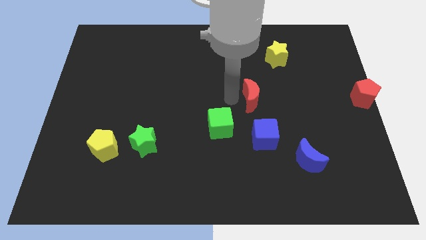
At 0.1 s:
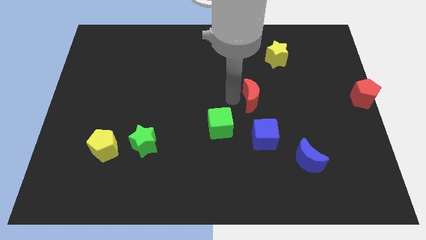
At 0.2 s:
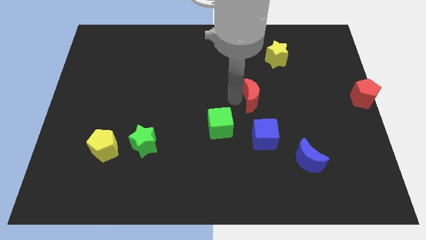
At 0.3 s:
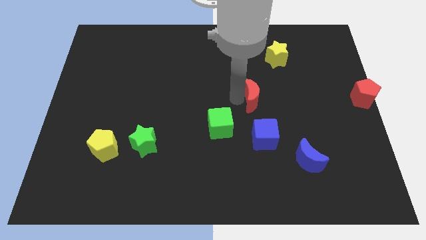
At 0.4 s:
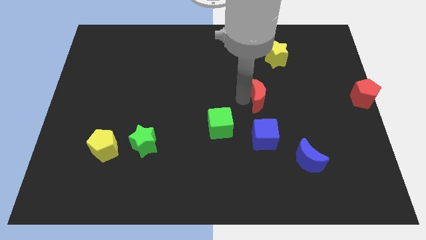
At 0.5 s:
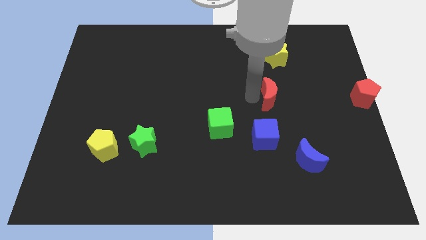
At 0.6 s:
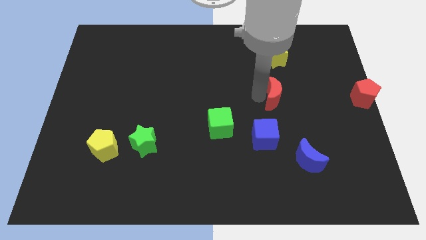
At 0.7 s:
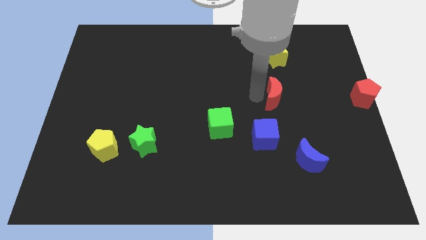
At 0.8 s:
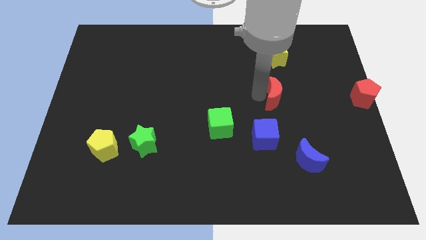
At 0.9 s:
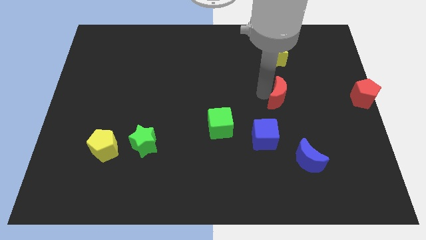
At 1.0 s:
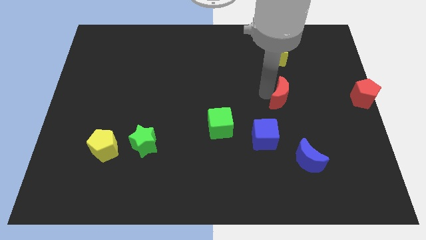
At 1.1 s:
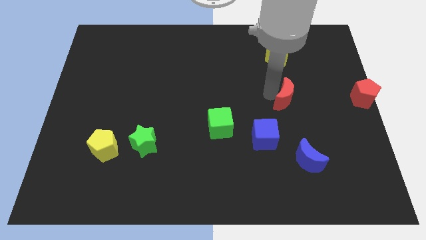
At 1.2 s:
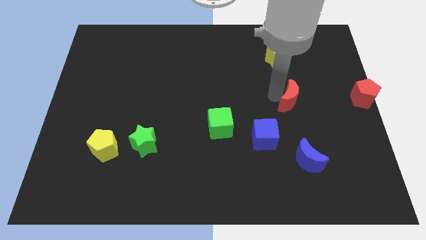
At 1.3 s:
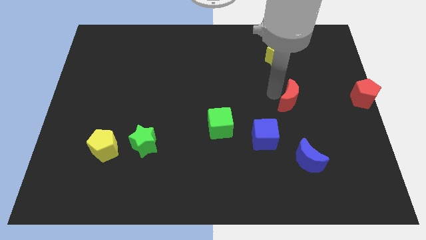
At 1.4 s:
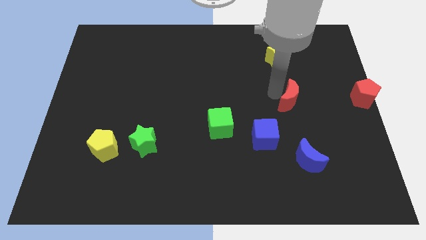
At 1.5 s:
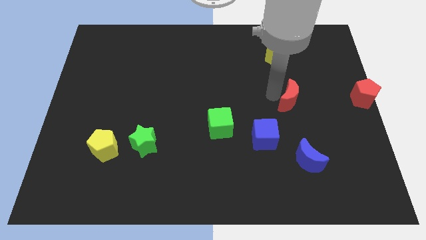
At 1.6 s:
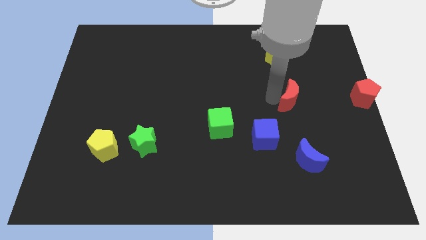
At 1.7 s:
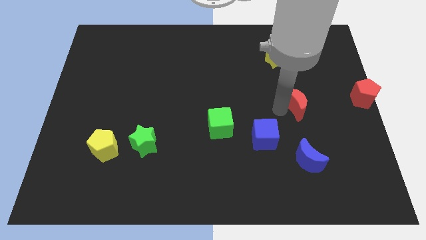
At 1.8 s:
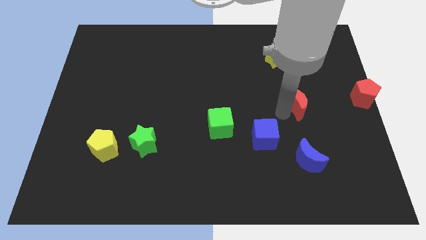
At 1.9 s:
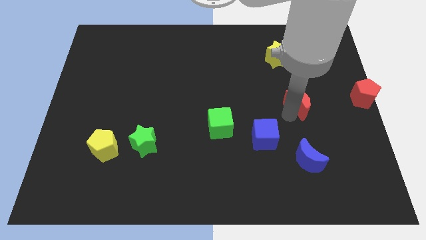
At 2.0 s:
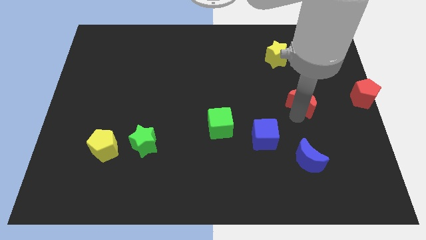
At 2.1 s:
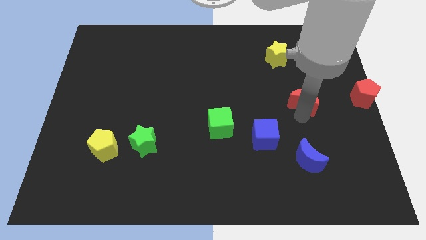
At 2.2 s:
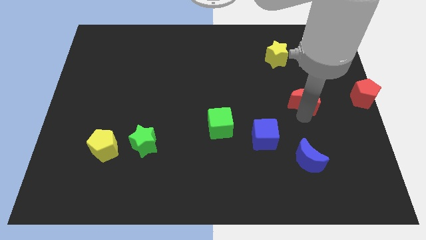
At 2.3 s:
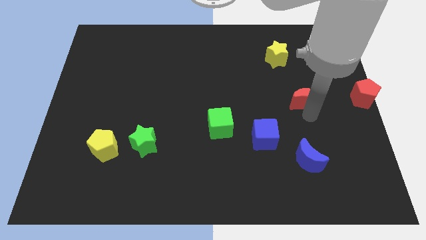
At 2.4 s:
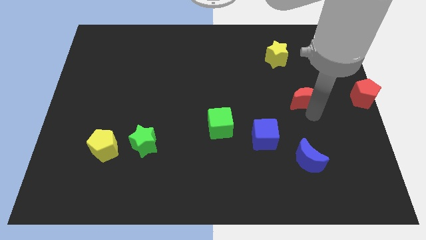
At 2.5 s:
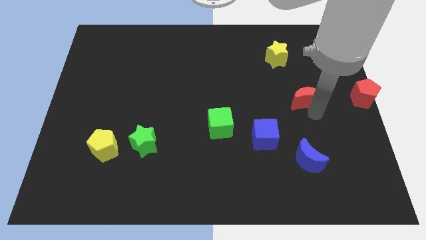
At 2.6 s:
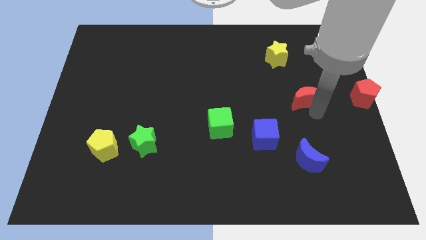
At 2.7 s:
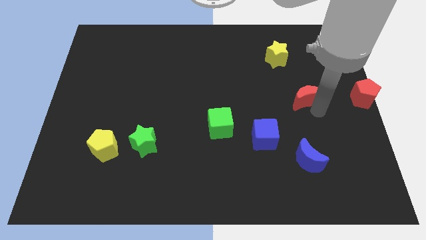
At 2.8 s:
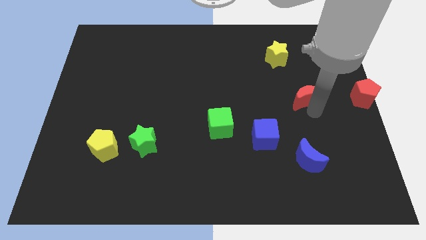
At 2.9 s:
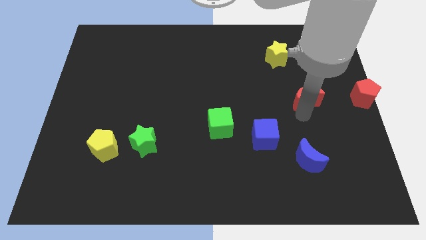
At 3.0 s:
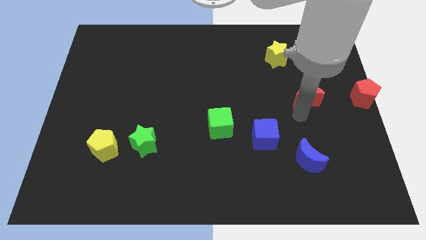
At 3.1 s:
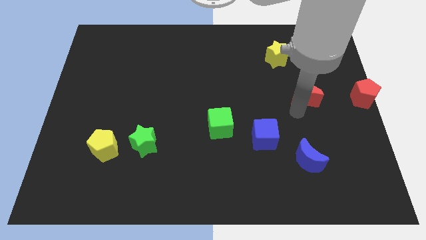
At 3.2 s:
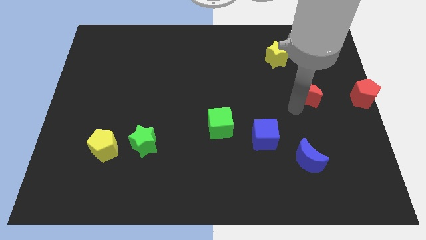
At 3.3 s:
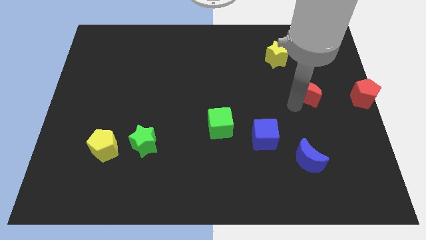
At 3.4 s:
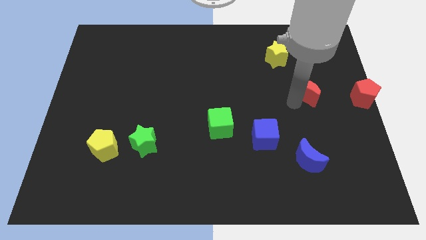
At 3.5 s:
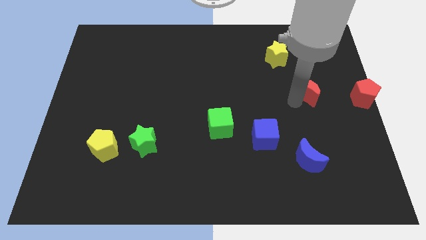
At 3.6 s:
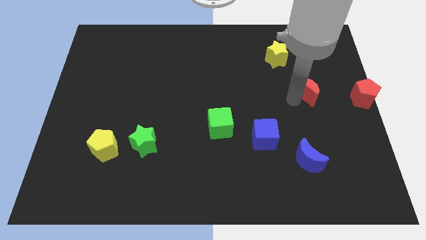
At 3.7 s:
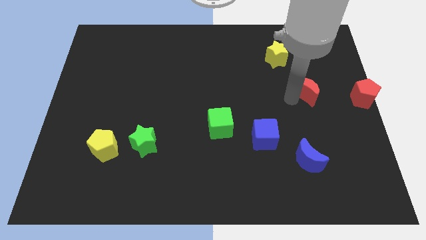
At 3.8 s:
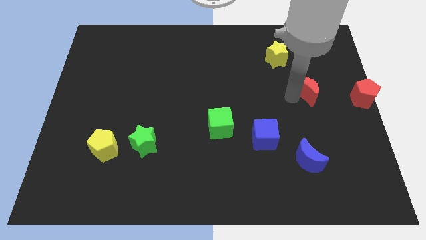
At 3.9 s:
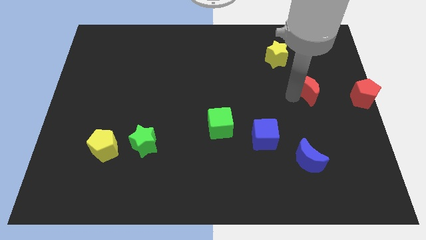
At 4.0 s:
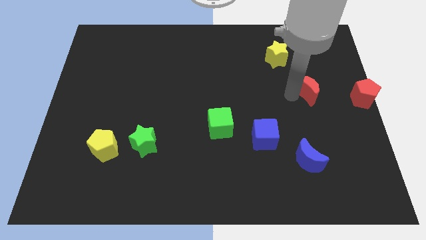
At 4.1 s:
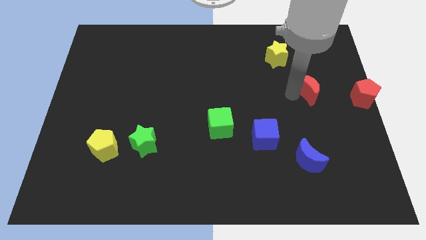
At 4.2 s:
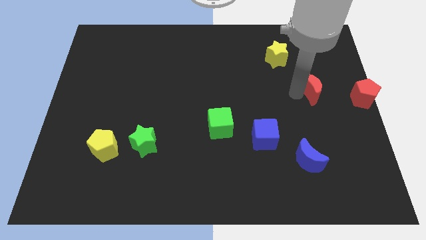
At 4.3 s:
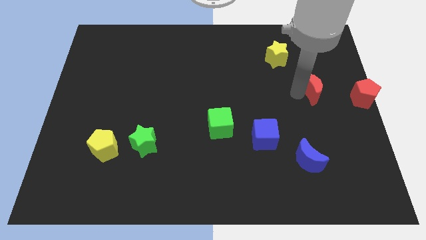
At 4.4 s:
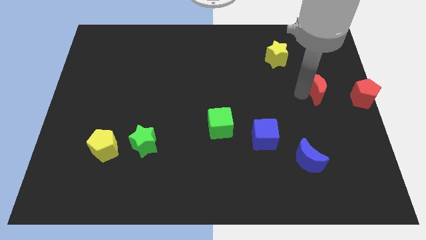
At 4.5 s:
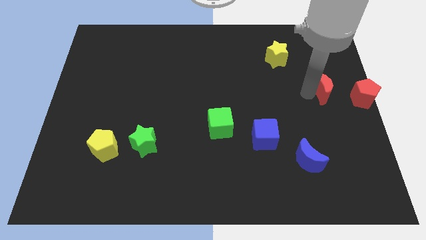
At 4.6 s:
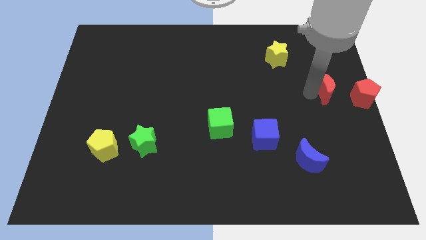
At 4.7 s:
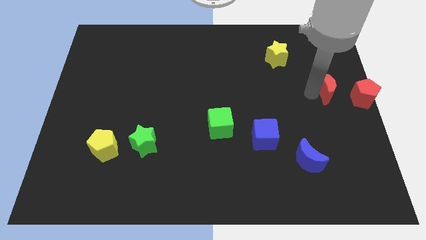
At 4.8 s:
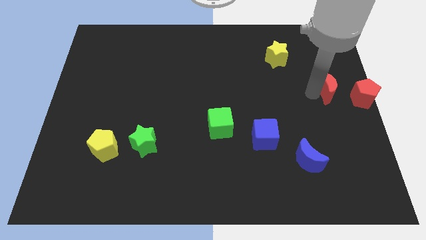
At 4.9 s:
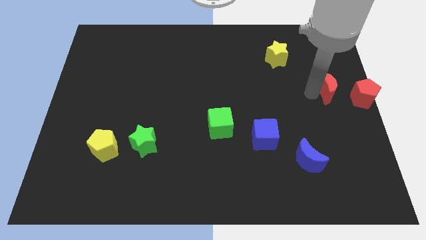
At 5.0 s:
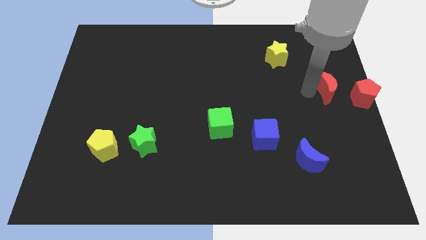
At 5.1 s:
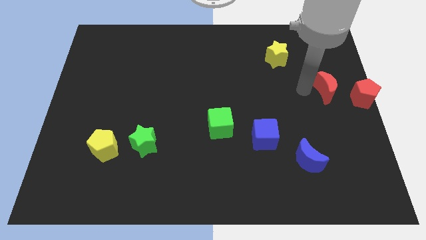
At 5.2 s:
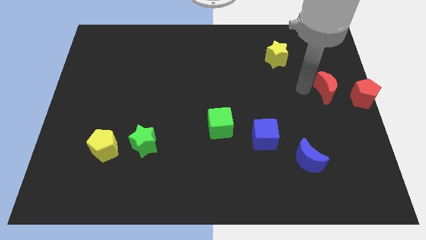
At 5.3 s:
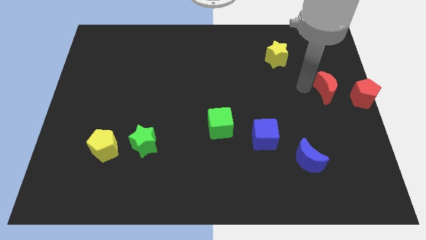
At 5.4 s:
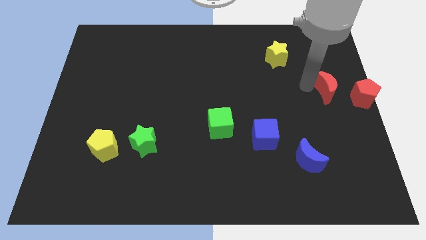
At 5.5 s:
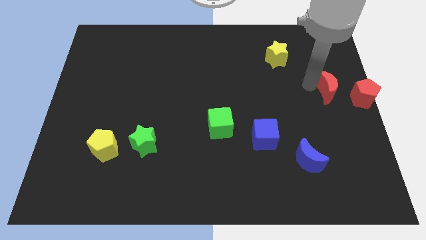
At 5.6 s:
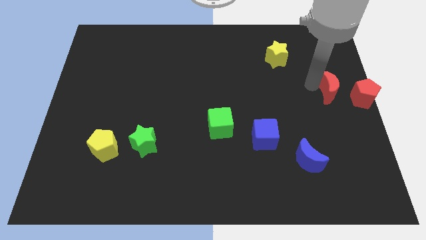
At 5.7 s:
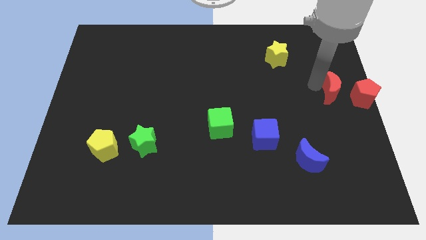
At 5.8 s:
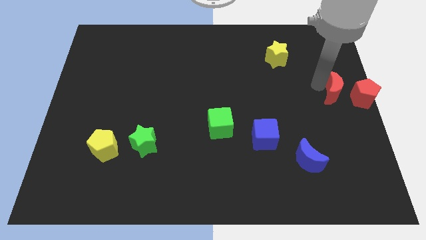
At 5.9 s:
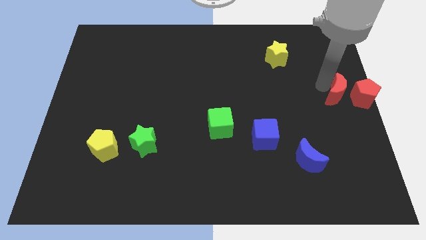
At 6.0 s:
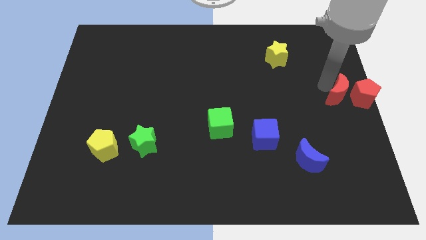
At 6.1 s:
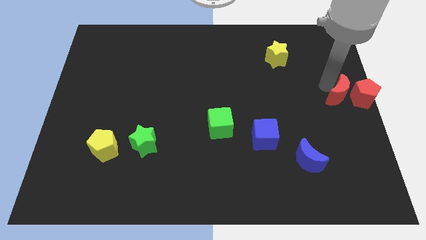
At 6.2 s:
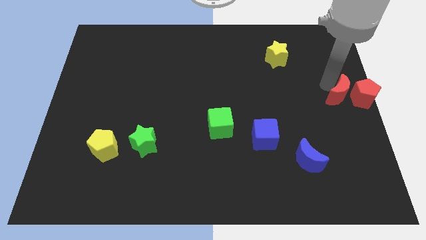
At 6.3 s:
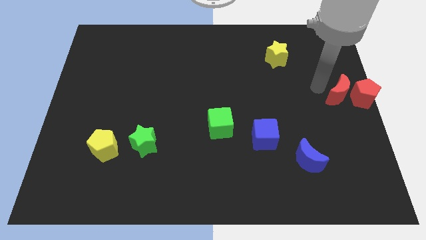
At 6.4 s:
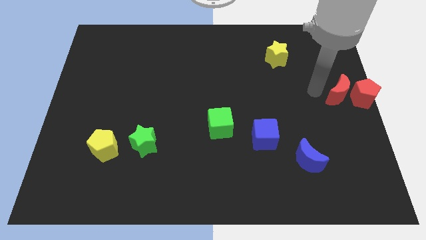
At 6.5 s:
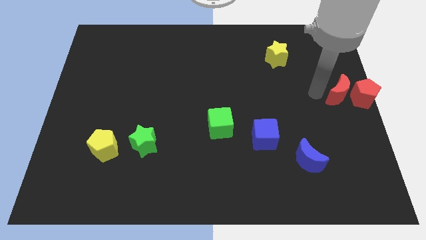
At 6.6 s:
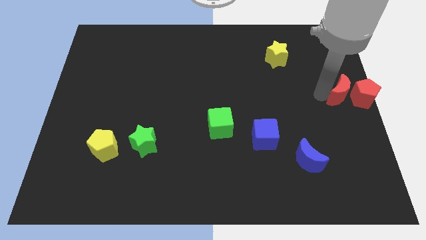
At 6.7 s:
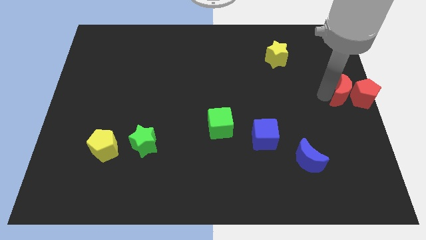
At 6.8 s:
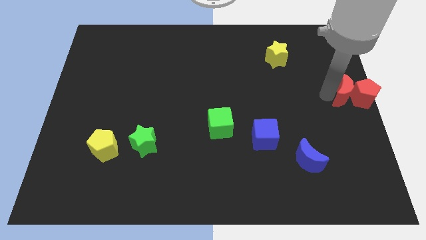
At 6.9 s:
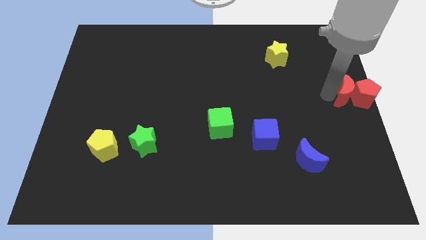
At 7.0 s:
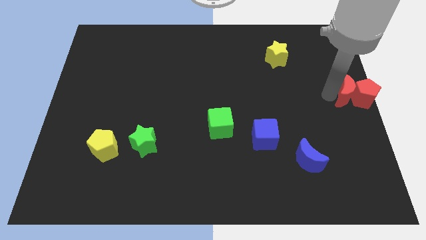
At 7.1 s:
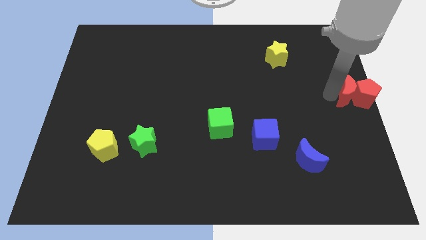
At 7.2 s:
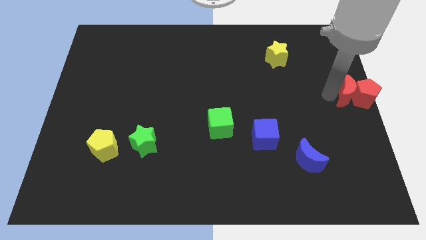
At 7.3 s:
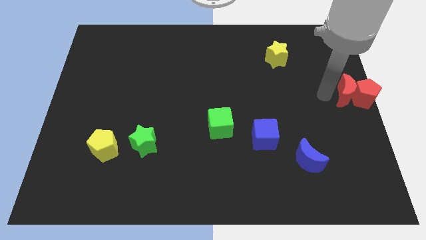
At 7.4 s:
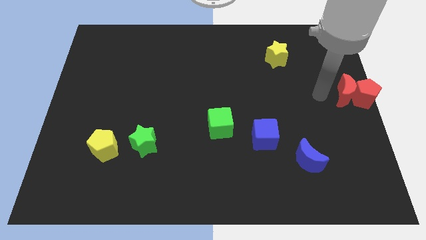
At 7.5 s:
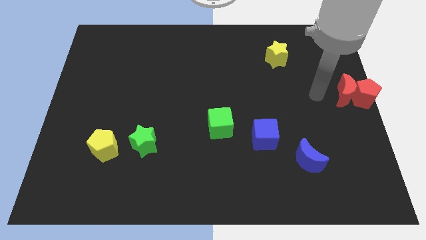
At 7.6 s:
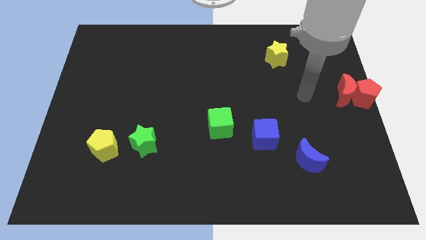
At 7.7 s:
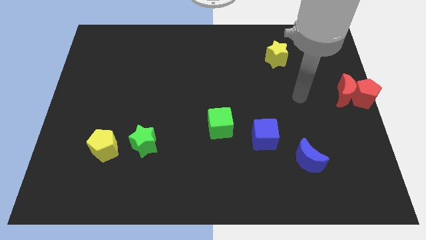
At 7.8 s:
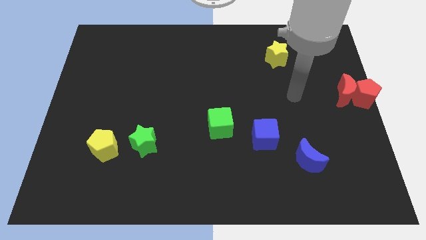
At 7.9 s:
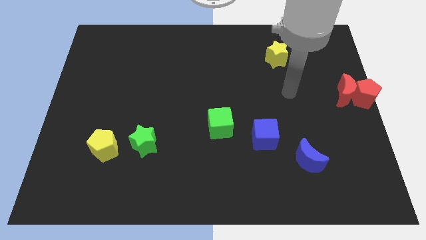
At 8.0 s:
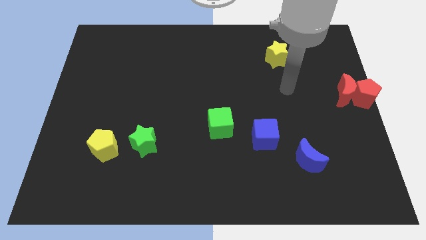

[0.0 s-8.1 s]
push red moon into red pentagon

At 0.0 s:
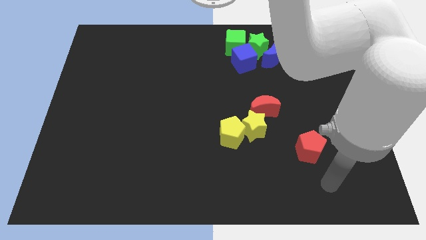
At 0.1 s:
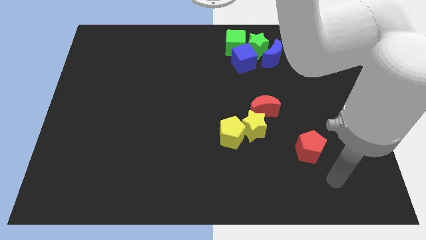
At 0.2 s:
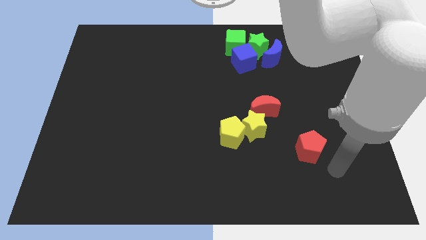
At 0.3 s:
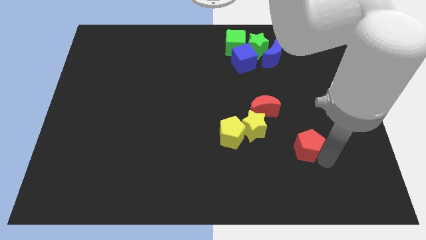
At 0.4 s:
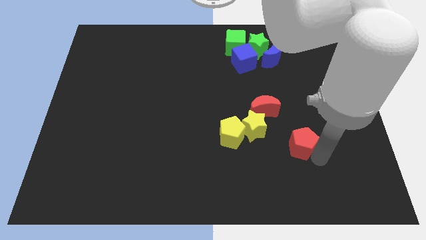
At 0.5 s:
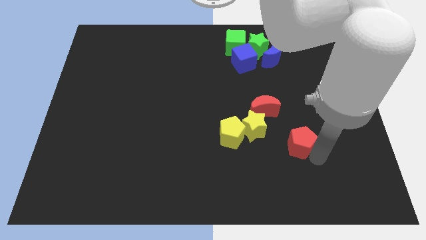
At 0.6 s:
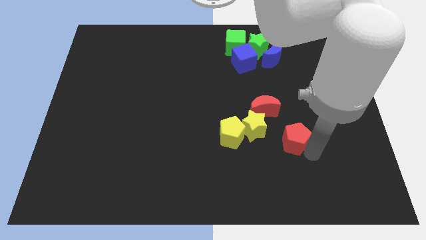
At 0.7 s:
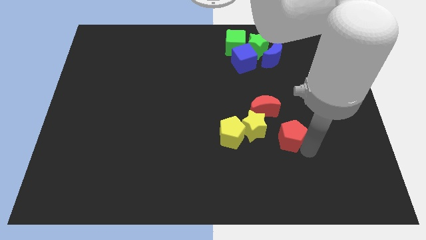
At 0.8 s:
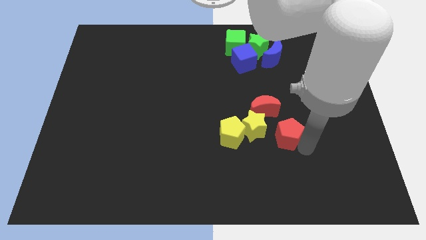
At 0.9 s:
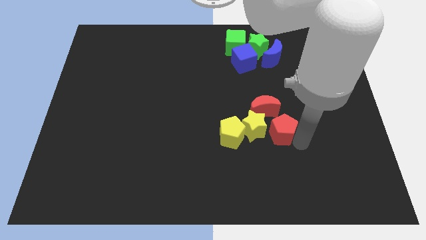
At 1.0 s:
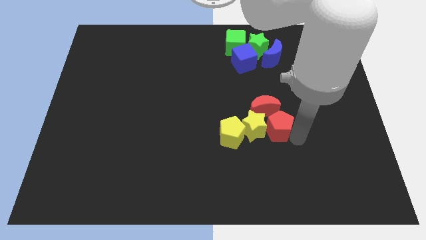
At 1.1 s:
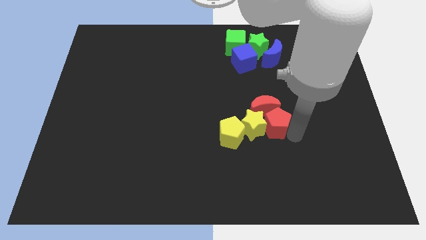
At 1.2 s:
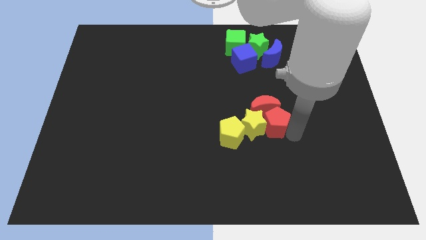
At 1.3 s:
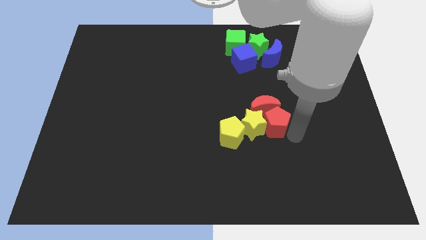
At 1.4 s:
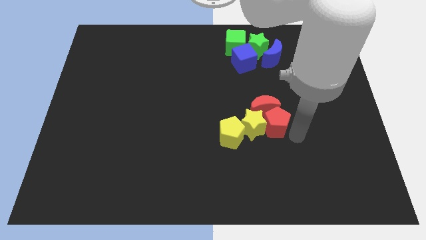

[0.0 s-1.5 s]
place red pentagon below the red moon
